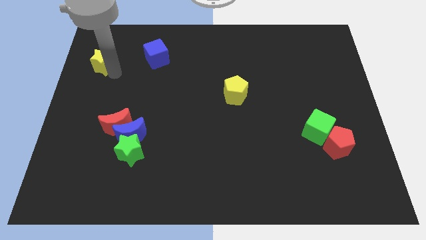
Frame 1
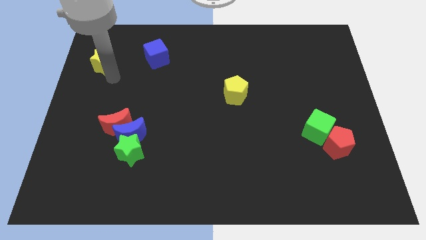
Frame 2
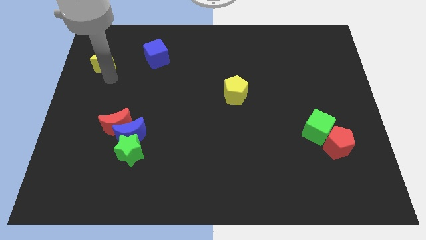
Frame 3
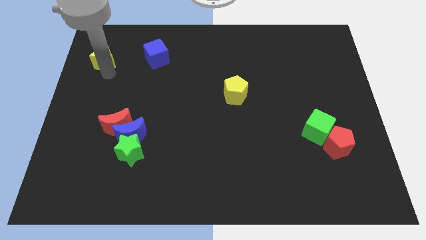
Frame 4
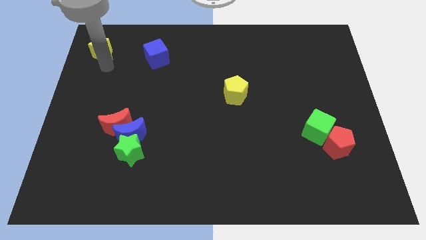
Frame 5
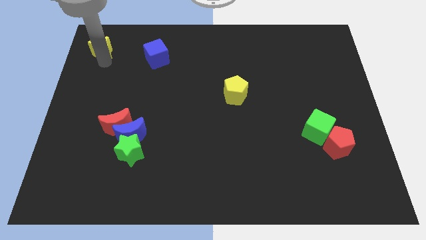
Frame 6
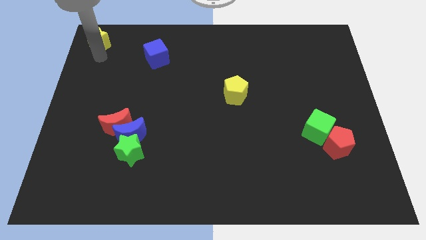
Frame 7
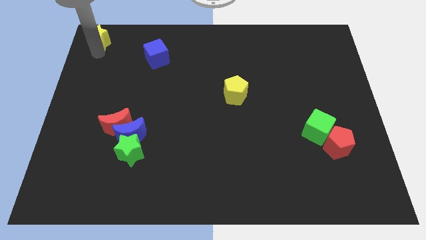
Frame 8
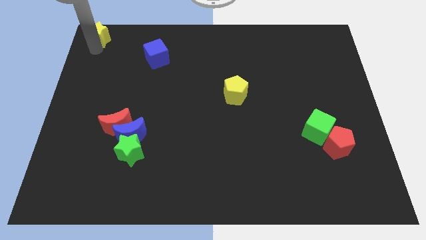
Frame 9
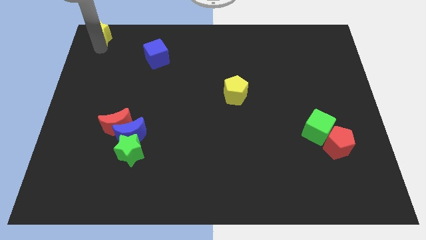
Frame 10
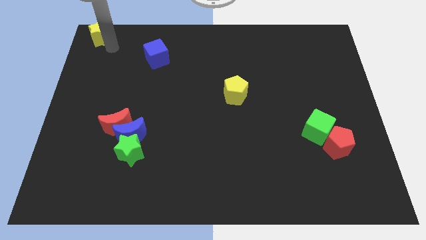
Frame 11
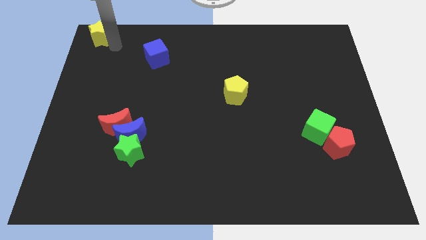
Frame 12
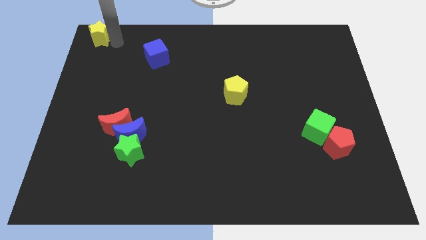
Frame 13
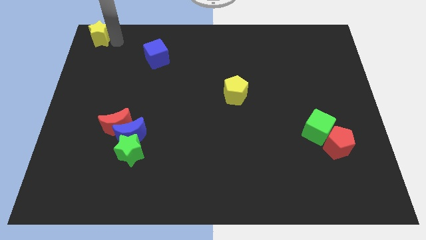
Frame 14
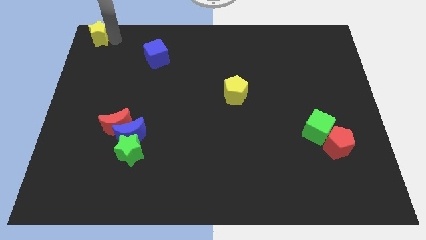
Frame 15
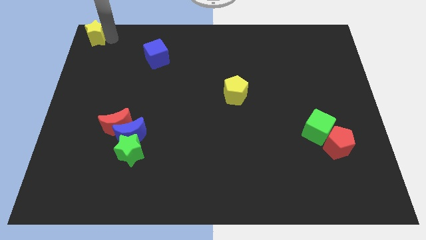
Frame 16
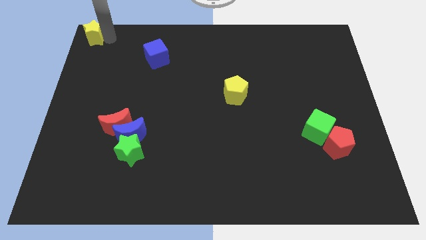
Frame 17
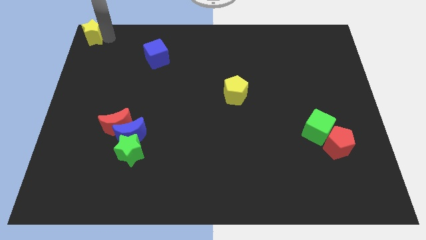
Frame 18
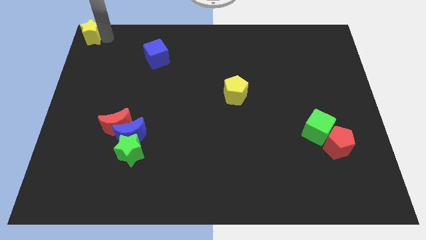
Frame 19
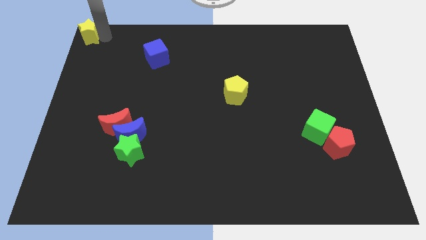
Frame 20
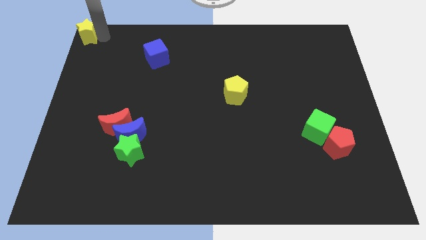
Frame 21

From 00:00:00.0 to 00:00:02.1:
drag the yellow star to the top left corner of the board

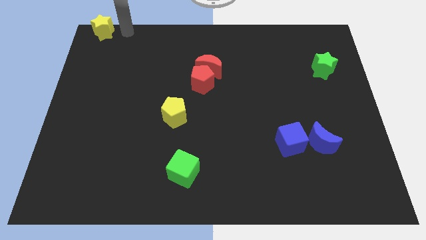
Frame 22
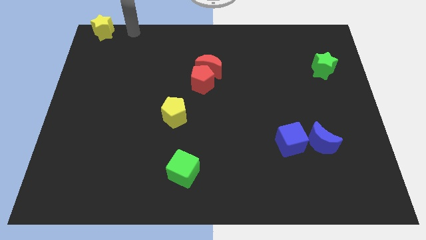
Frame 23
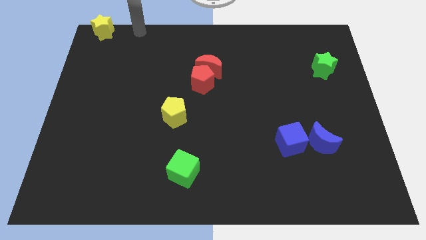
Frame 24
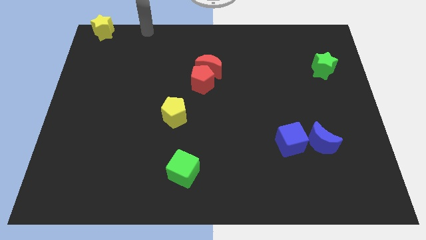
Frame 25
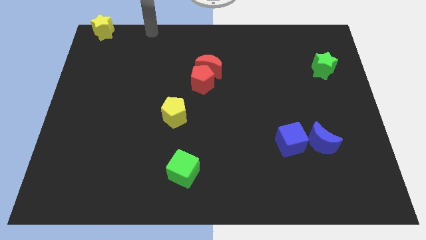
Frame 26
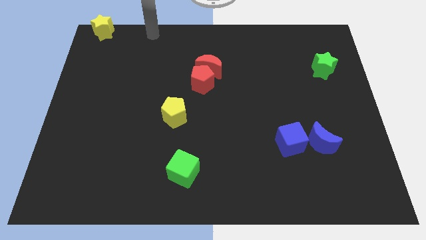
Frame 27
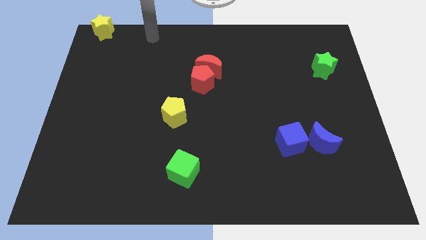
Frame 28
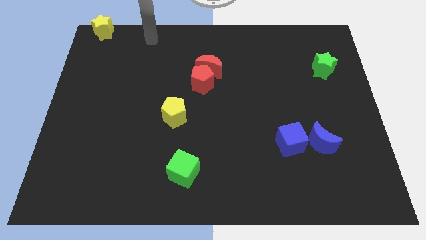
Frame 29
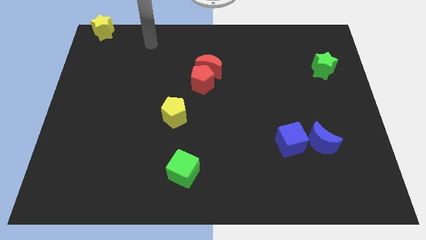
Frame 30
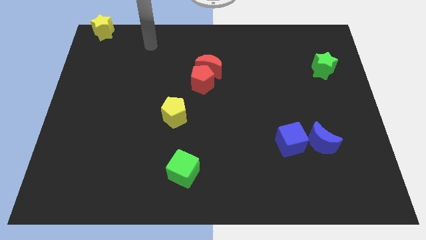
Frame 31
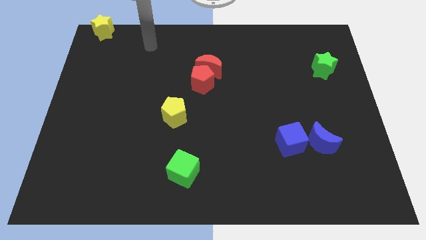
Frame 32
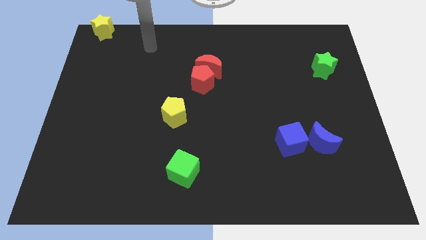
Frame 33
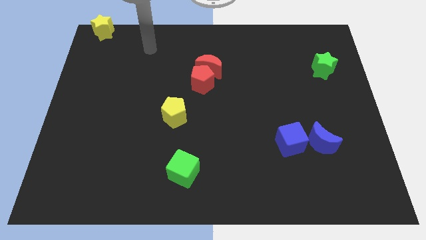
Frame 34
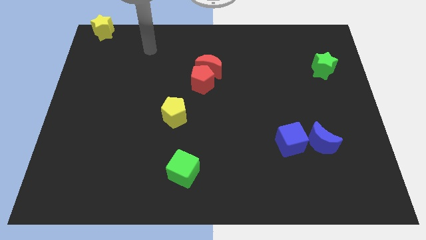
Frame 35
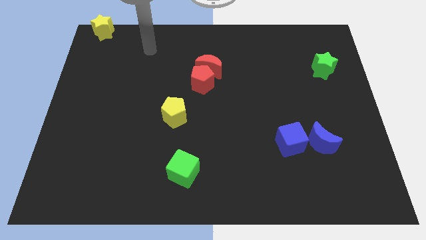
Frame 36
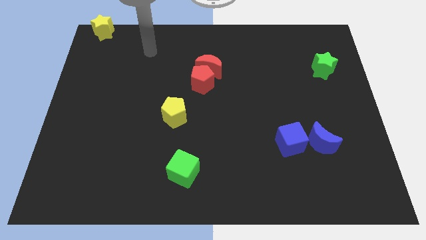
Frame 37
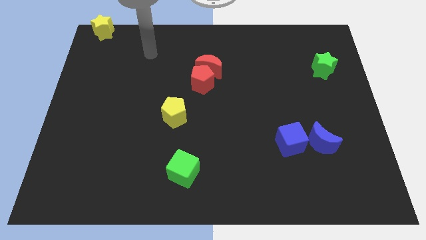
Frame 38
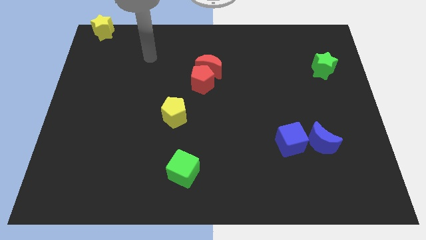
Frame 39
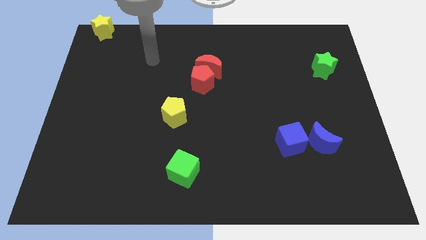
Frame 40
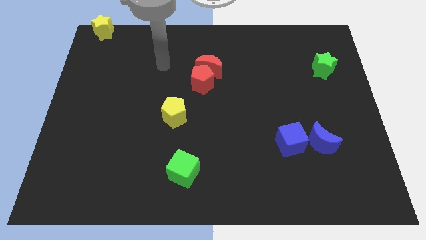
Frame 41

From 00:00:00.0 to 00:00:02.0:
point the arm to the left of red blocks

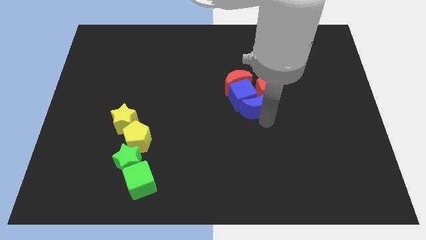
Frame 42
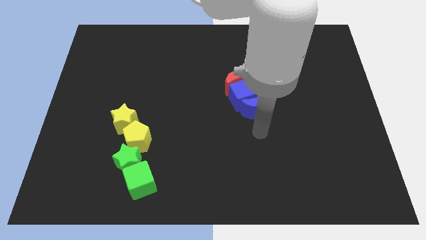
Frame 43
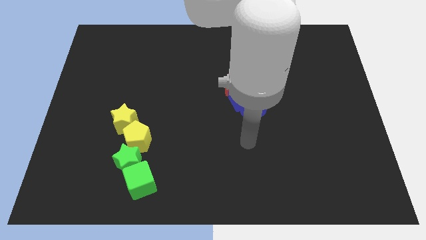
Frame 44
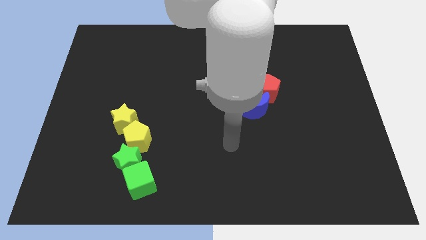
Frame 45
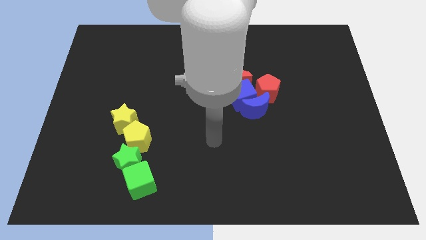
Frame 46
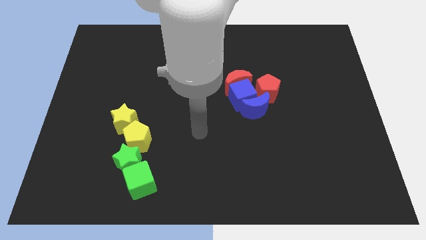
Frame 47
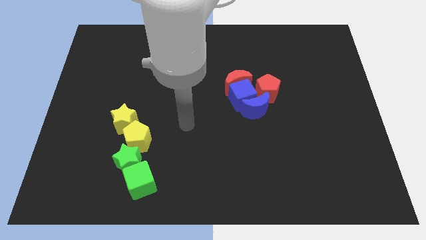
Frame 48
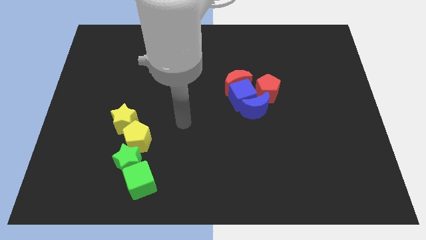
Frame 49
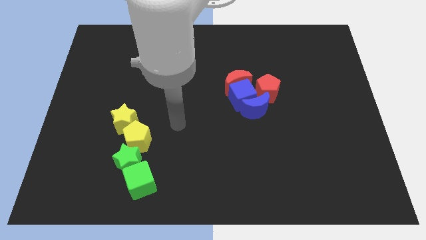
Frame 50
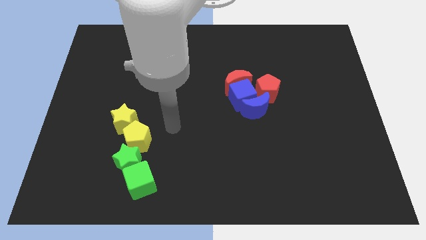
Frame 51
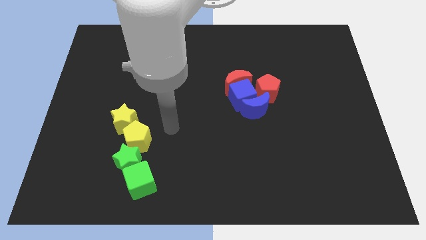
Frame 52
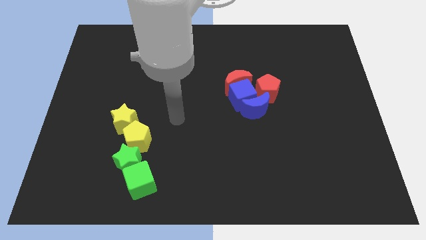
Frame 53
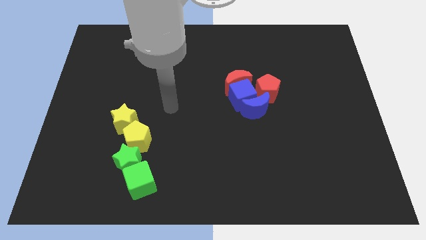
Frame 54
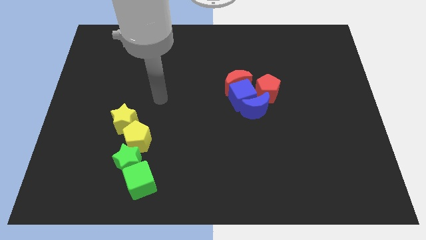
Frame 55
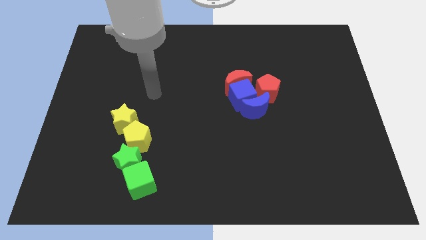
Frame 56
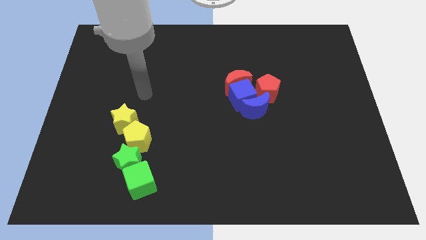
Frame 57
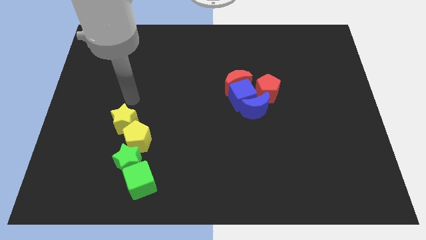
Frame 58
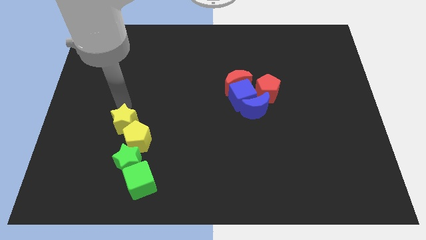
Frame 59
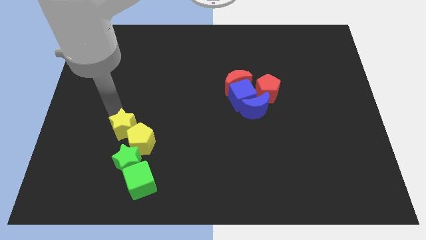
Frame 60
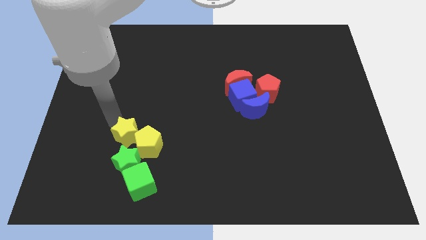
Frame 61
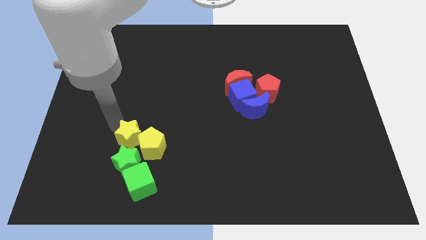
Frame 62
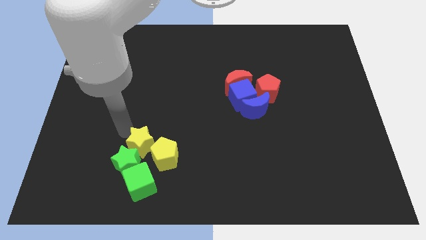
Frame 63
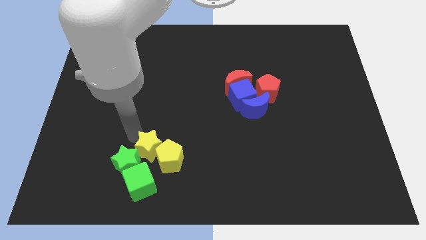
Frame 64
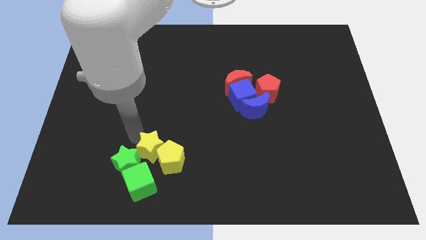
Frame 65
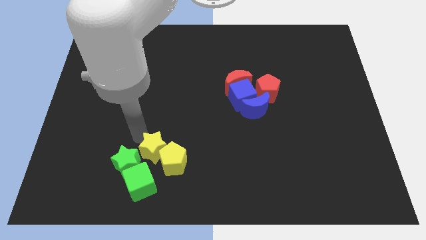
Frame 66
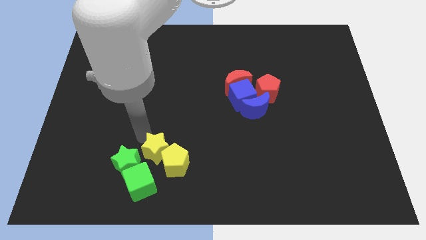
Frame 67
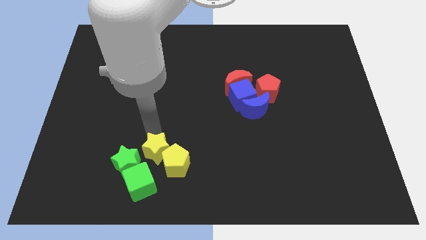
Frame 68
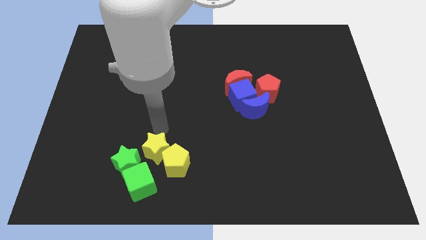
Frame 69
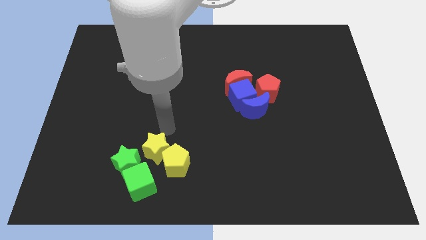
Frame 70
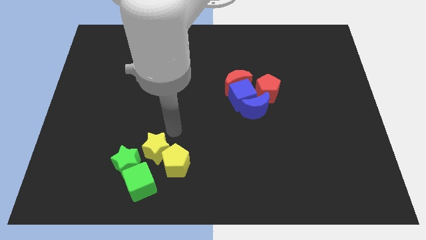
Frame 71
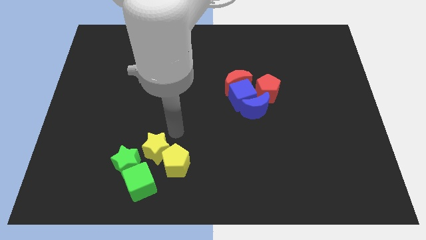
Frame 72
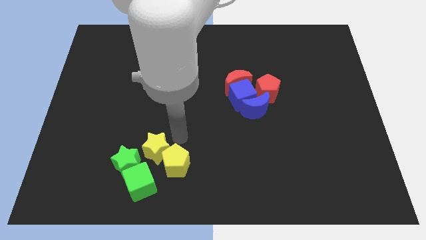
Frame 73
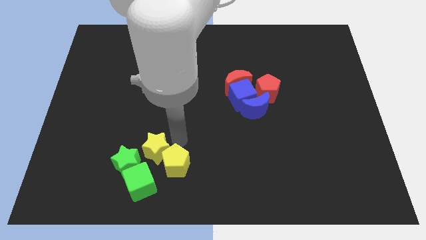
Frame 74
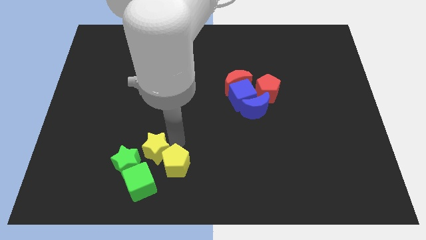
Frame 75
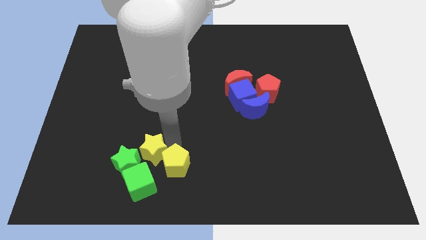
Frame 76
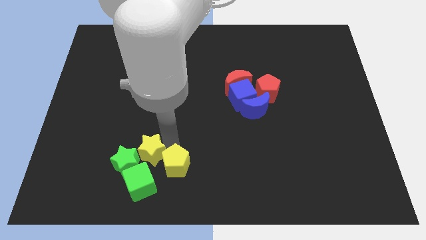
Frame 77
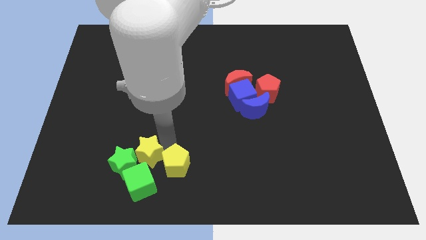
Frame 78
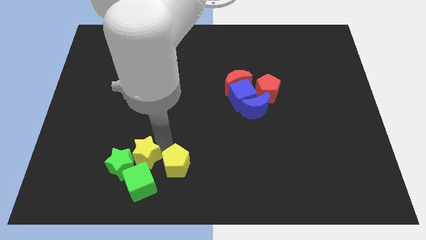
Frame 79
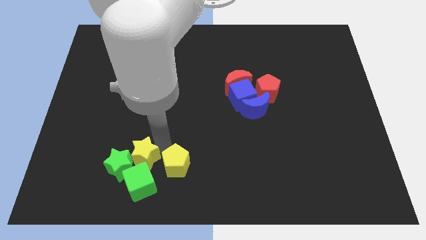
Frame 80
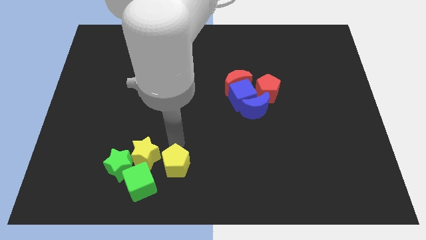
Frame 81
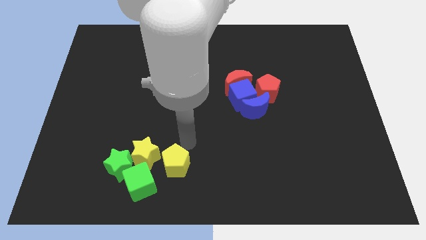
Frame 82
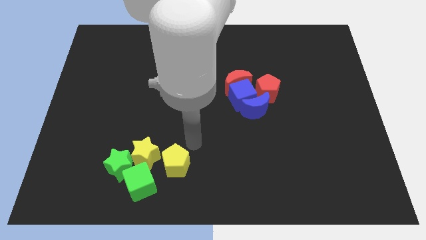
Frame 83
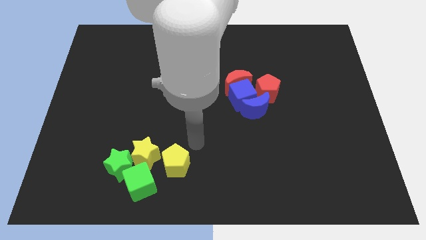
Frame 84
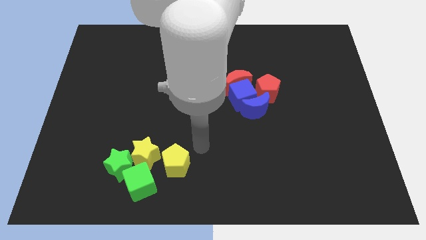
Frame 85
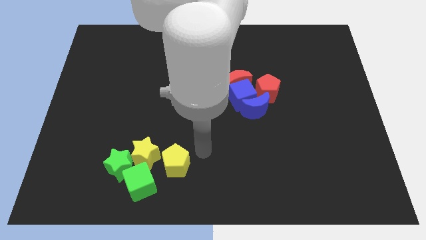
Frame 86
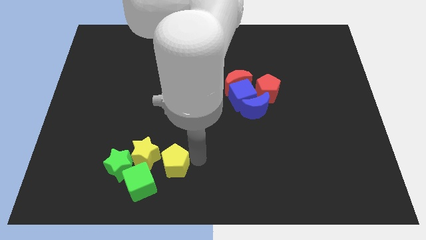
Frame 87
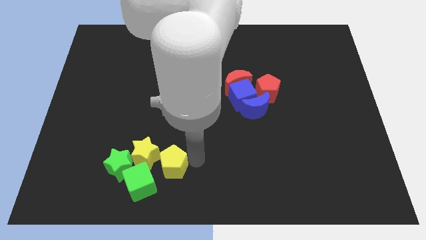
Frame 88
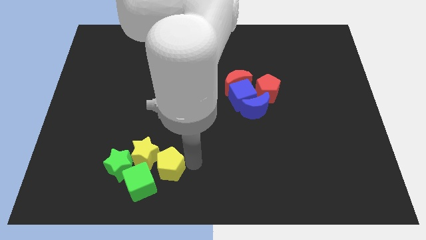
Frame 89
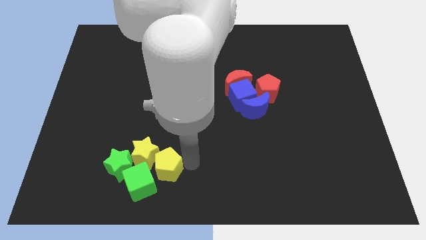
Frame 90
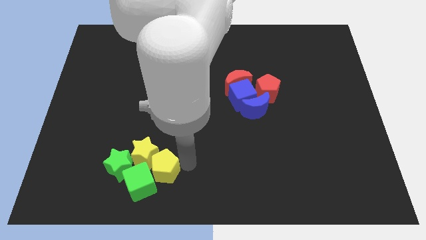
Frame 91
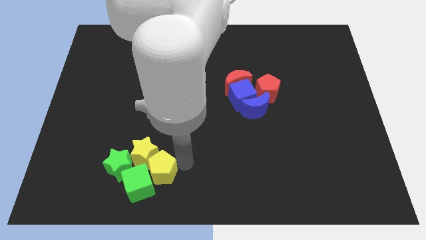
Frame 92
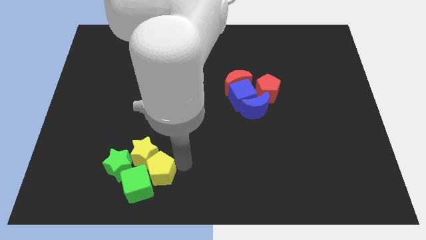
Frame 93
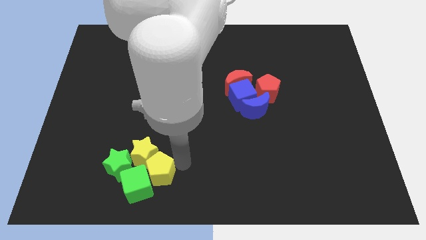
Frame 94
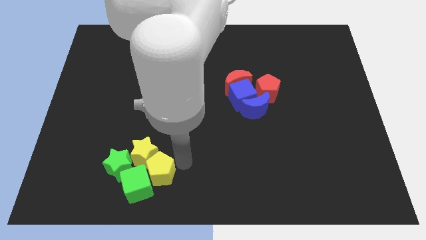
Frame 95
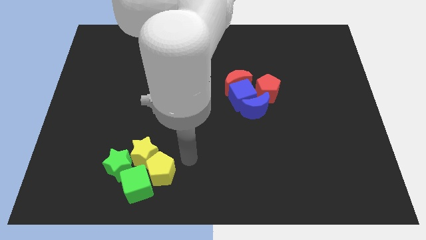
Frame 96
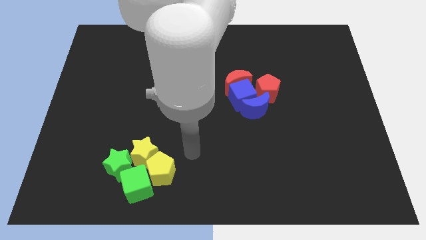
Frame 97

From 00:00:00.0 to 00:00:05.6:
push the yellow blocks into the right side of the green objects
